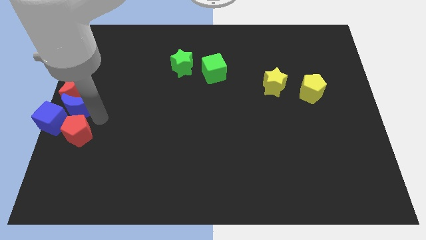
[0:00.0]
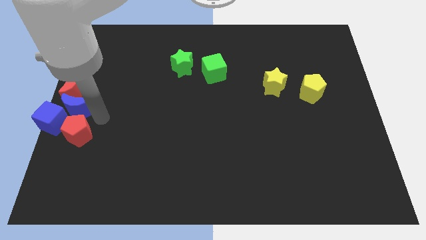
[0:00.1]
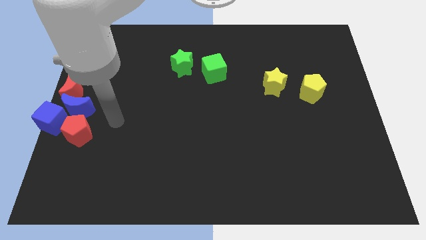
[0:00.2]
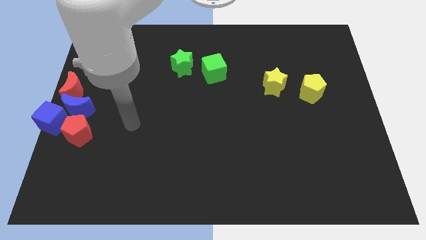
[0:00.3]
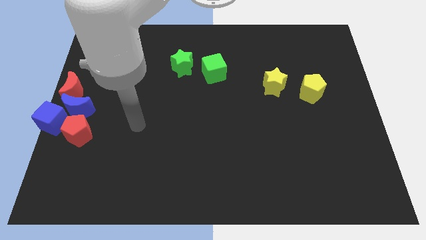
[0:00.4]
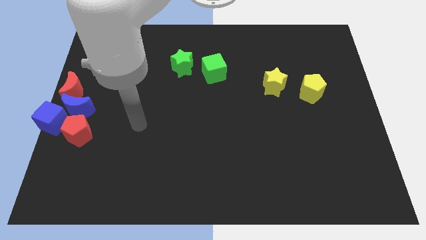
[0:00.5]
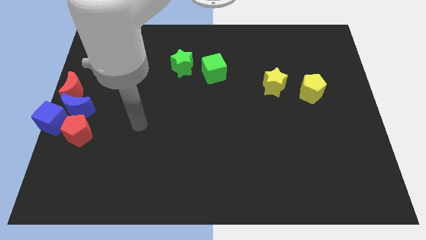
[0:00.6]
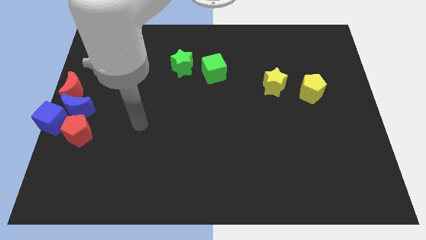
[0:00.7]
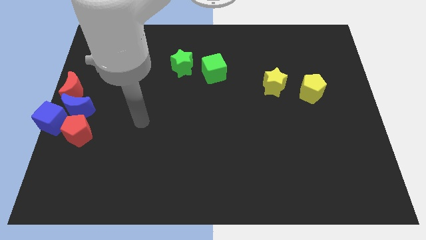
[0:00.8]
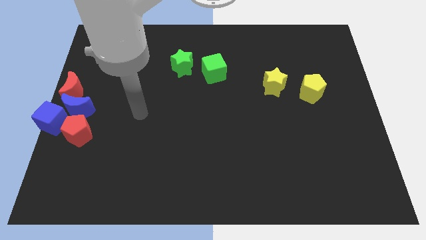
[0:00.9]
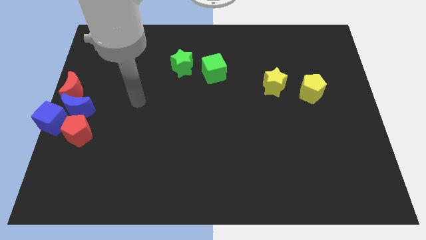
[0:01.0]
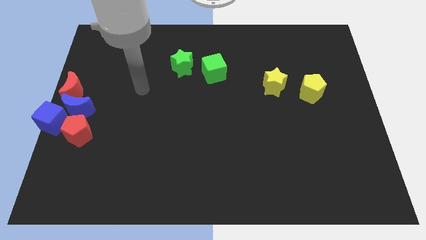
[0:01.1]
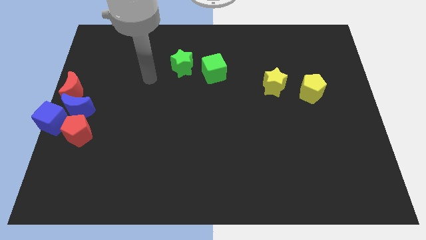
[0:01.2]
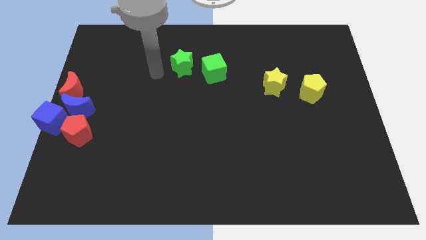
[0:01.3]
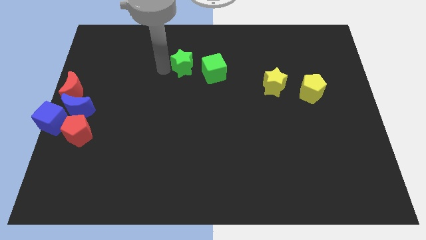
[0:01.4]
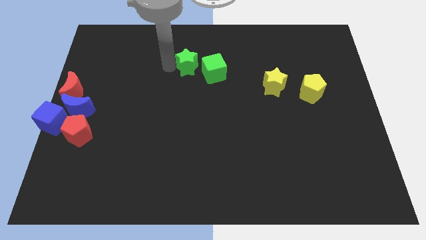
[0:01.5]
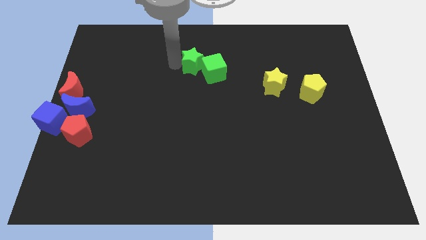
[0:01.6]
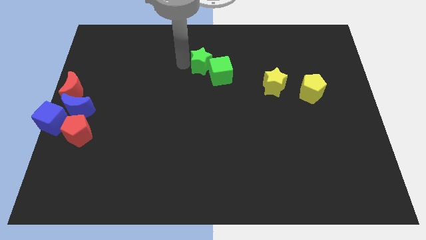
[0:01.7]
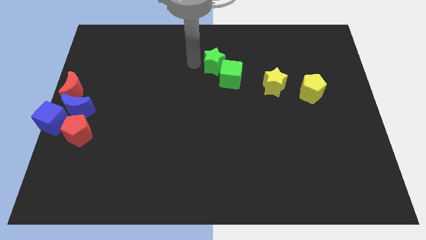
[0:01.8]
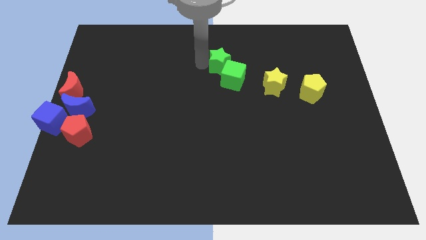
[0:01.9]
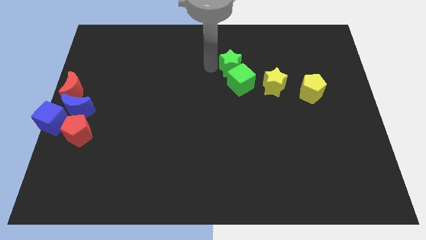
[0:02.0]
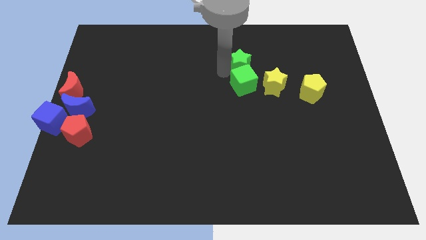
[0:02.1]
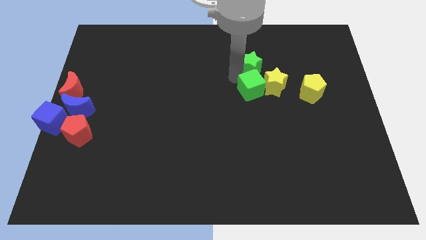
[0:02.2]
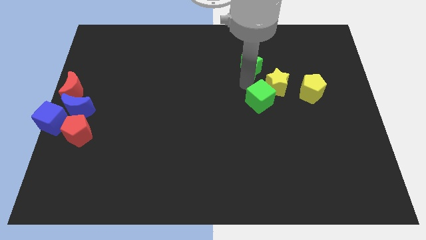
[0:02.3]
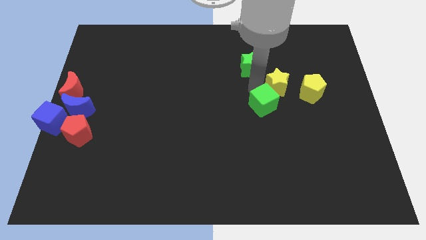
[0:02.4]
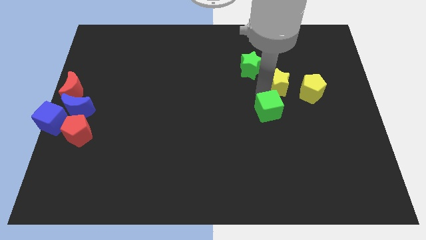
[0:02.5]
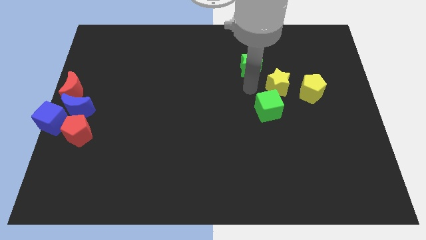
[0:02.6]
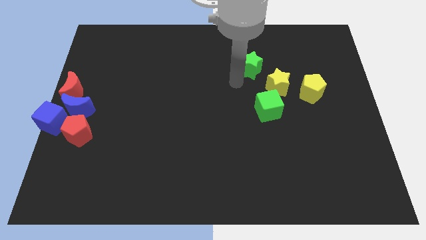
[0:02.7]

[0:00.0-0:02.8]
push the green cube and green star towards the yellow star

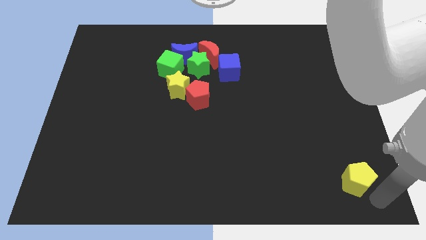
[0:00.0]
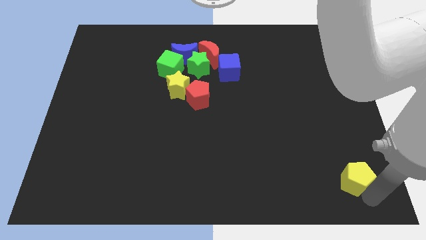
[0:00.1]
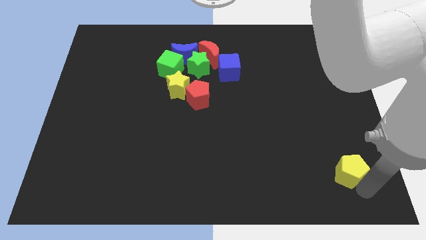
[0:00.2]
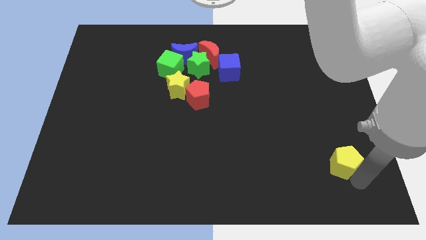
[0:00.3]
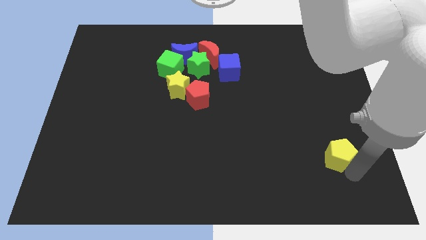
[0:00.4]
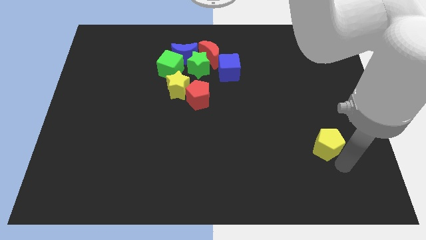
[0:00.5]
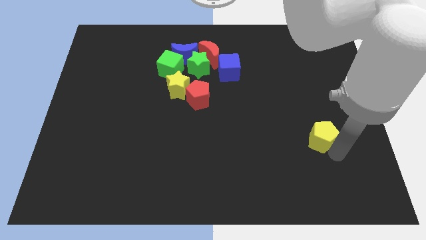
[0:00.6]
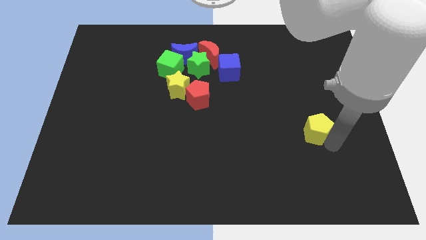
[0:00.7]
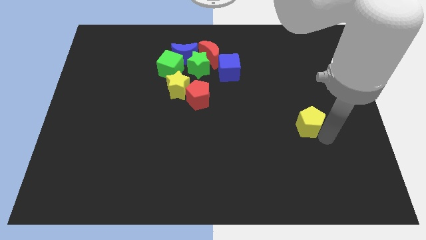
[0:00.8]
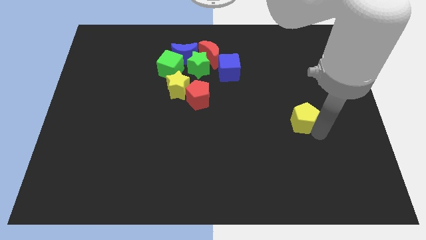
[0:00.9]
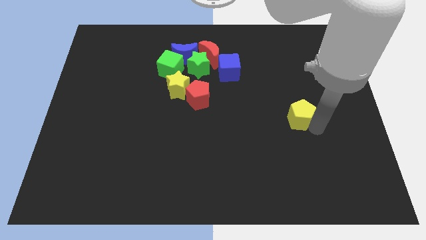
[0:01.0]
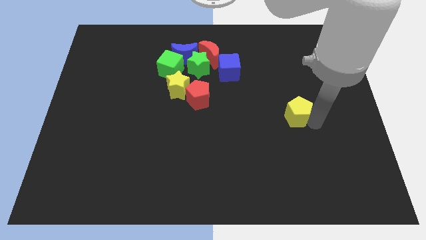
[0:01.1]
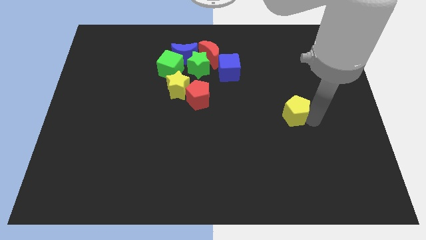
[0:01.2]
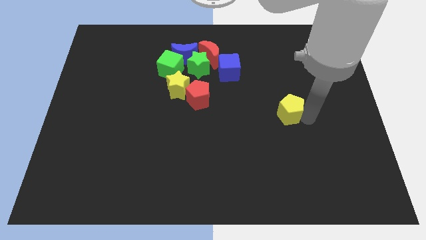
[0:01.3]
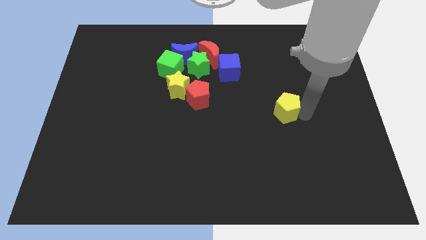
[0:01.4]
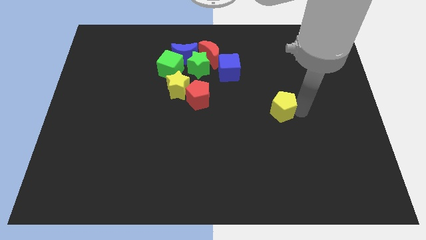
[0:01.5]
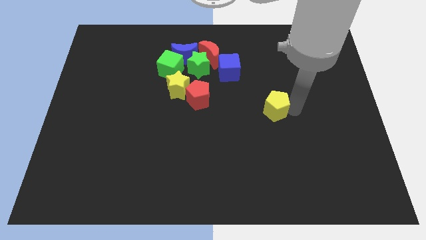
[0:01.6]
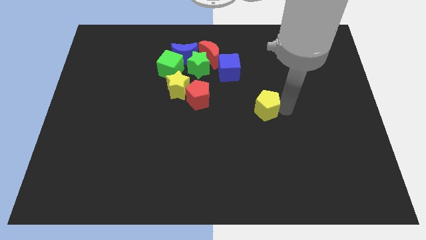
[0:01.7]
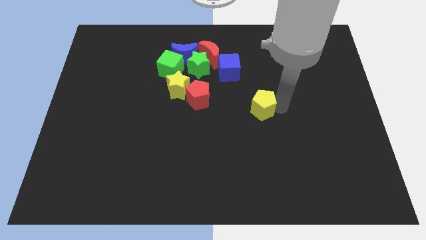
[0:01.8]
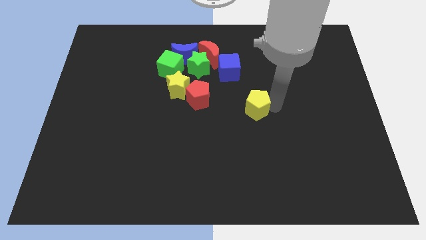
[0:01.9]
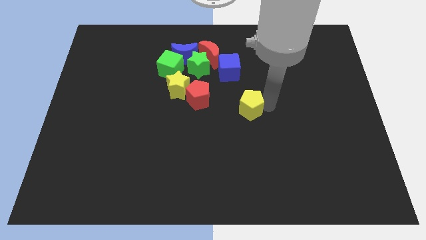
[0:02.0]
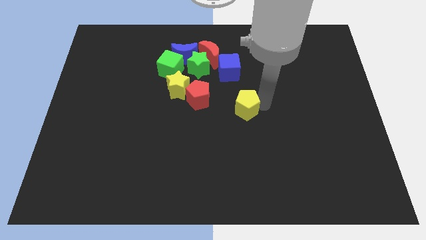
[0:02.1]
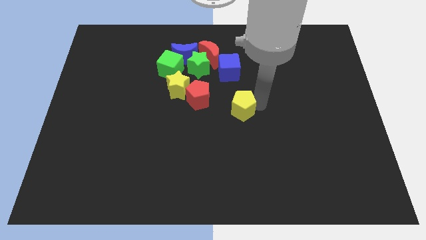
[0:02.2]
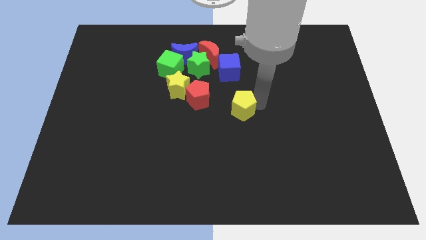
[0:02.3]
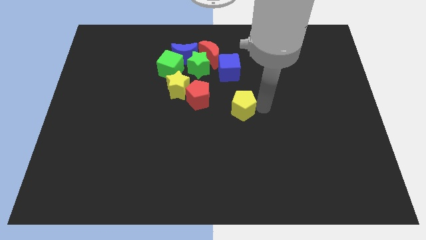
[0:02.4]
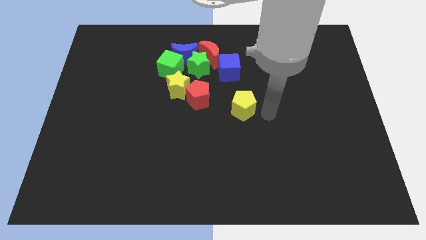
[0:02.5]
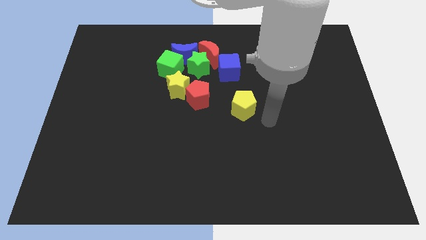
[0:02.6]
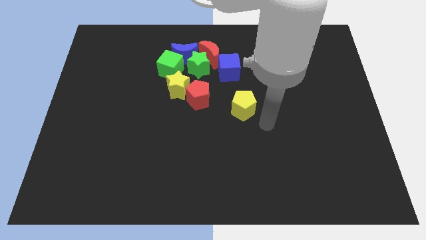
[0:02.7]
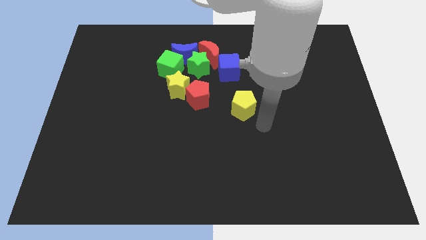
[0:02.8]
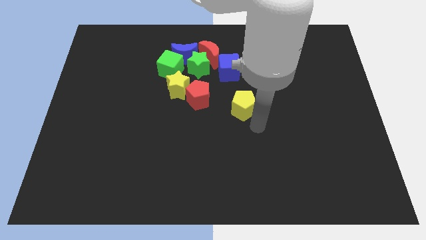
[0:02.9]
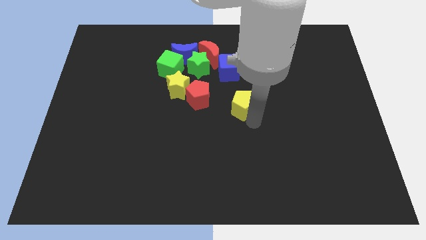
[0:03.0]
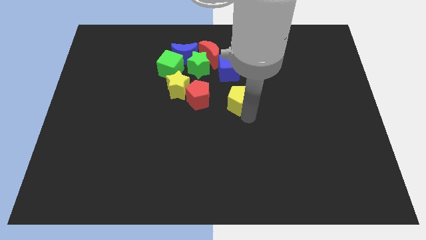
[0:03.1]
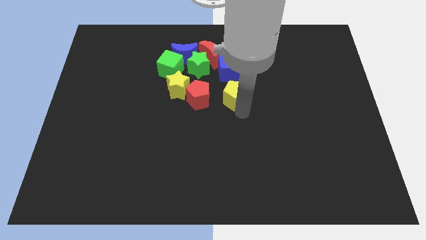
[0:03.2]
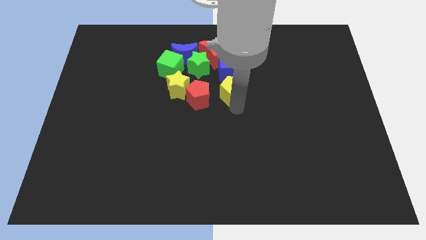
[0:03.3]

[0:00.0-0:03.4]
push the yellow pentagon towards the group of blocks

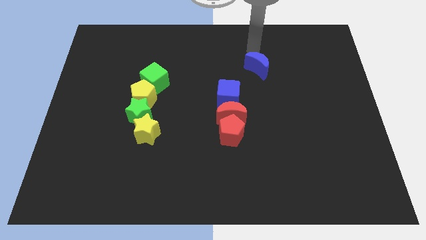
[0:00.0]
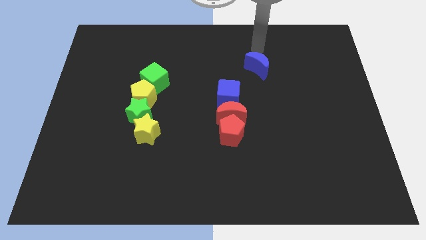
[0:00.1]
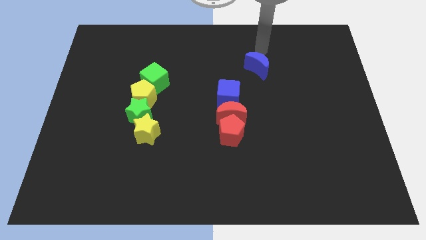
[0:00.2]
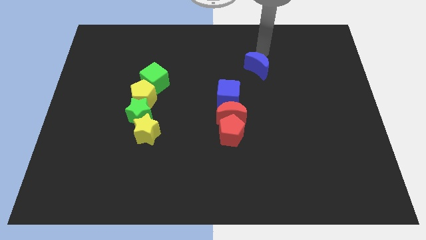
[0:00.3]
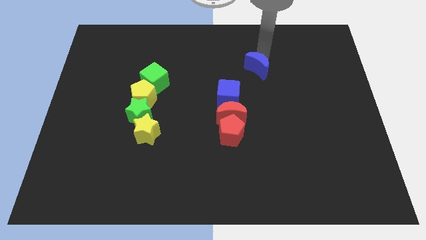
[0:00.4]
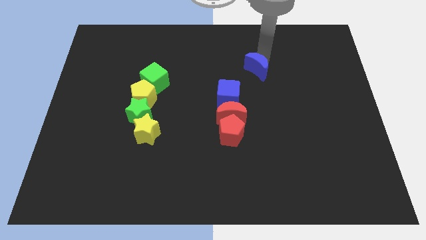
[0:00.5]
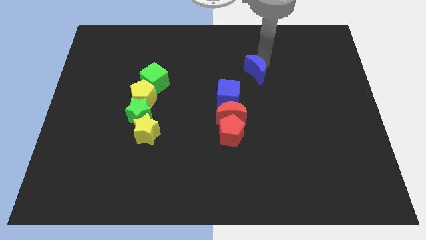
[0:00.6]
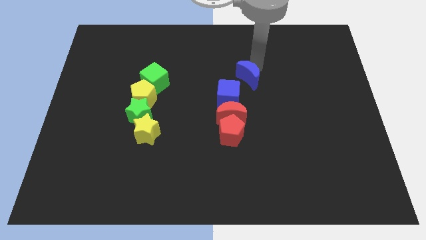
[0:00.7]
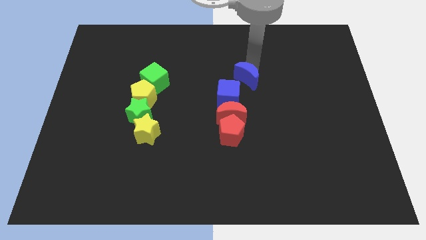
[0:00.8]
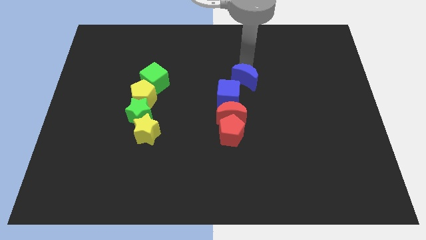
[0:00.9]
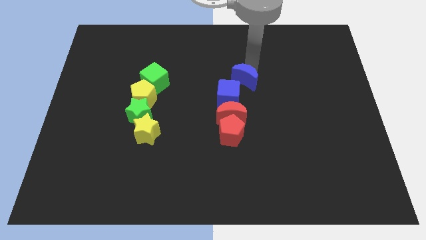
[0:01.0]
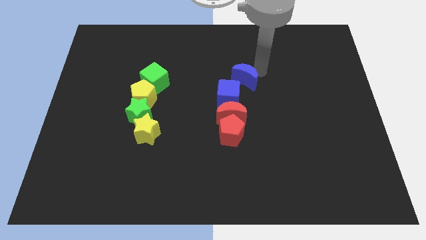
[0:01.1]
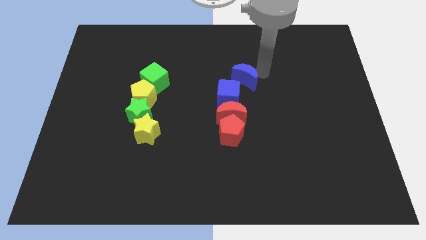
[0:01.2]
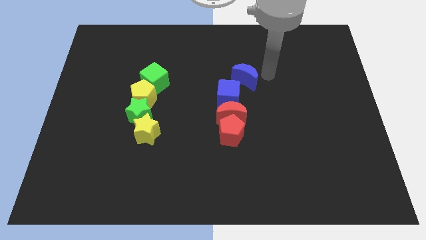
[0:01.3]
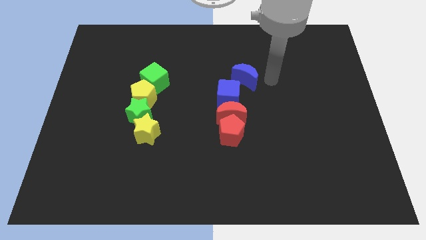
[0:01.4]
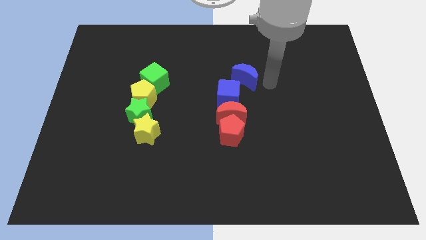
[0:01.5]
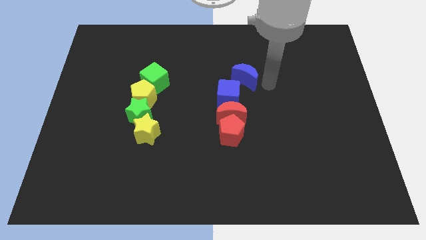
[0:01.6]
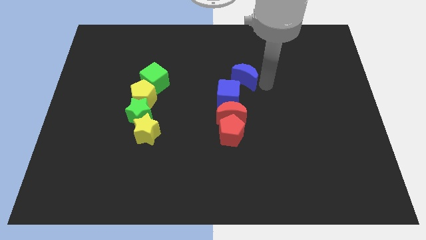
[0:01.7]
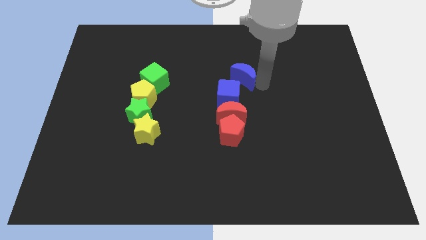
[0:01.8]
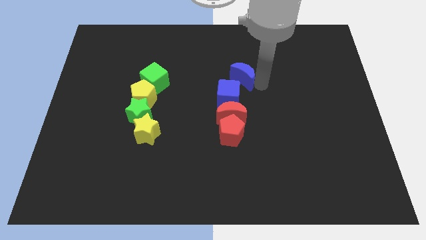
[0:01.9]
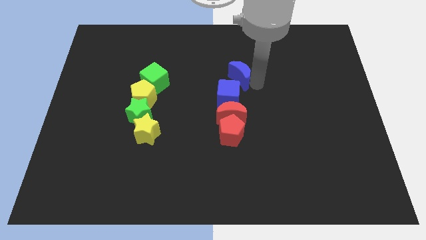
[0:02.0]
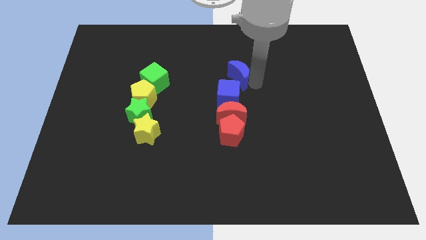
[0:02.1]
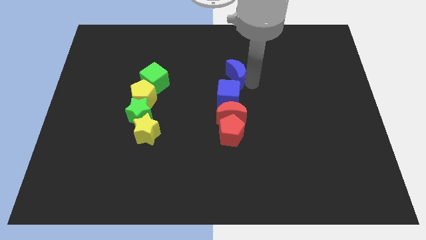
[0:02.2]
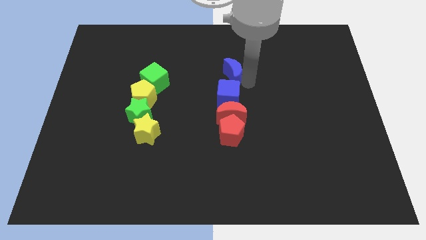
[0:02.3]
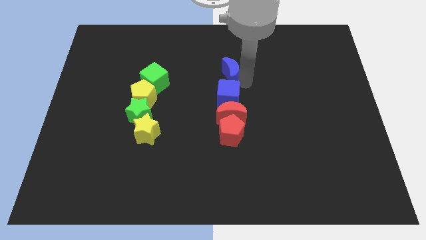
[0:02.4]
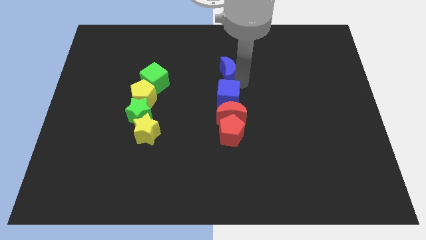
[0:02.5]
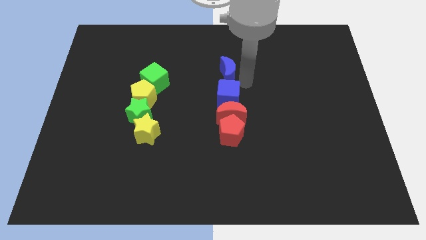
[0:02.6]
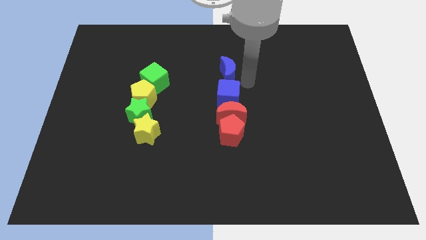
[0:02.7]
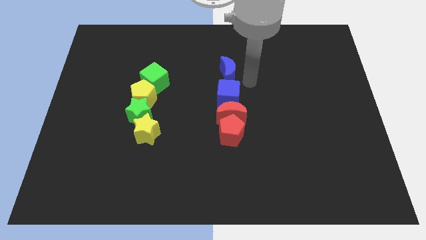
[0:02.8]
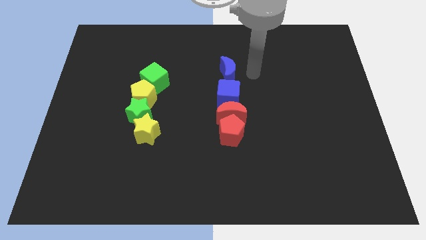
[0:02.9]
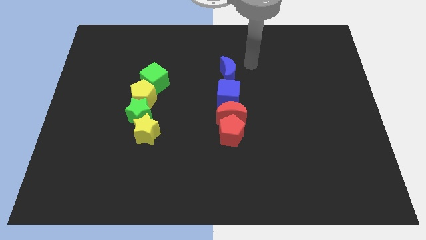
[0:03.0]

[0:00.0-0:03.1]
push blue moon above the blue cube
